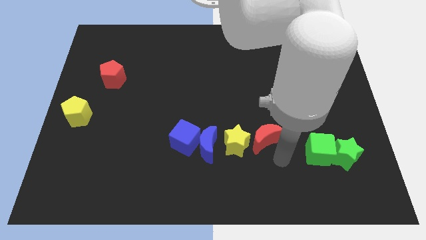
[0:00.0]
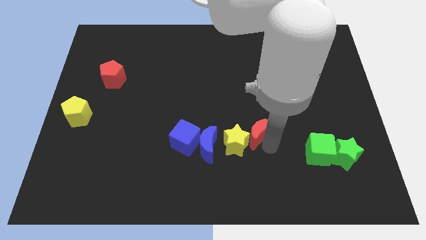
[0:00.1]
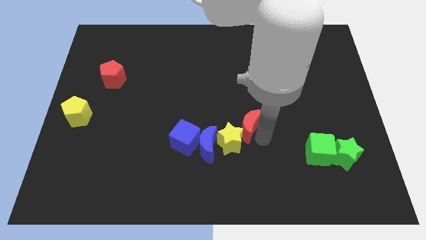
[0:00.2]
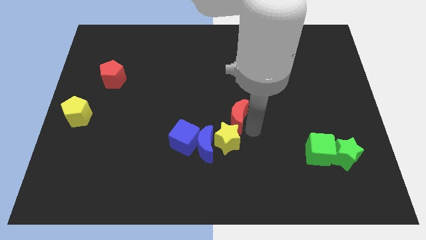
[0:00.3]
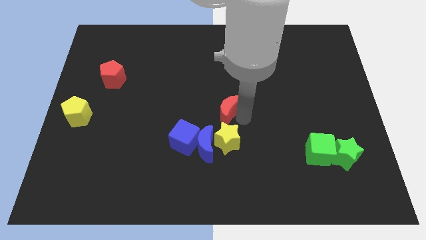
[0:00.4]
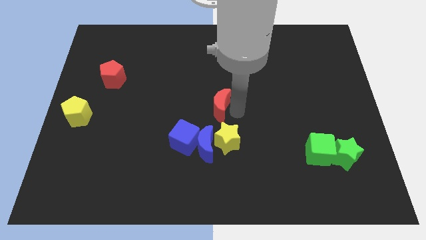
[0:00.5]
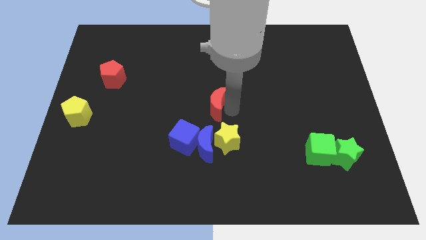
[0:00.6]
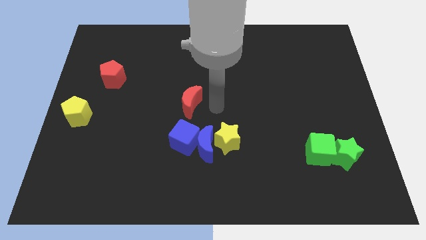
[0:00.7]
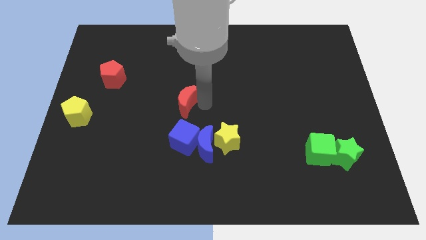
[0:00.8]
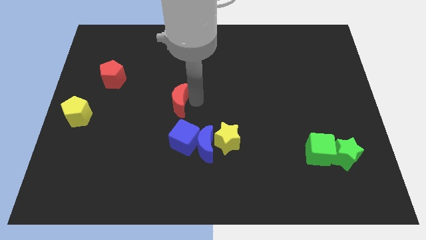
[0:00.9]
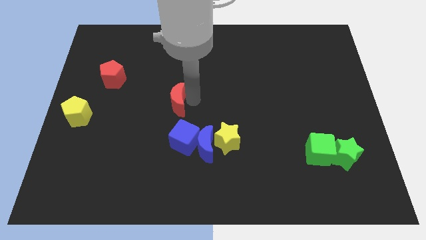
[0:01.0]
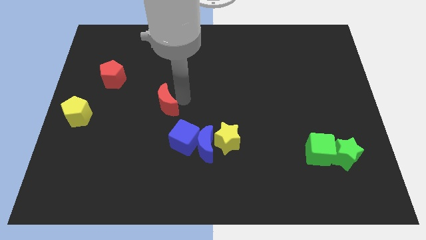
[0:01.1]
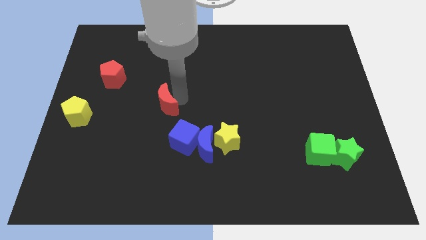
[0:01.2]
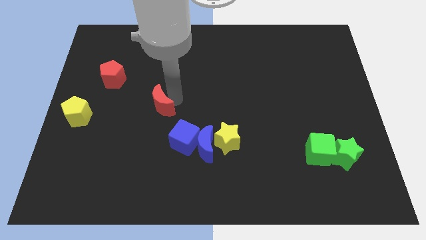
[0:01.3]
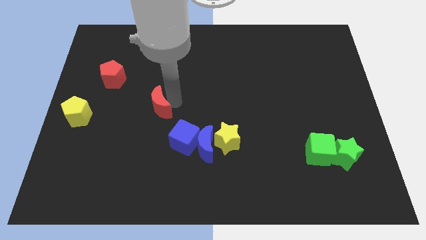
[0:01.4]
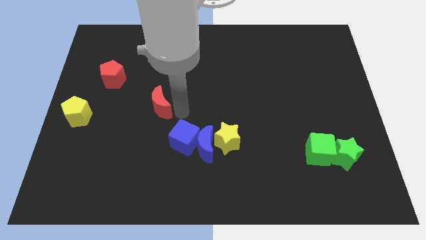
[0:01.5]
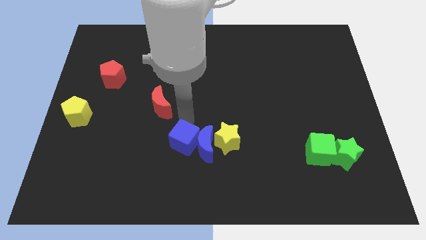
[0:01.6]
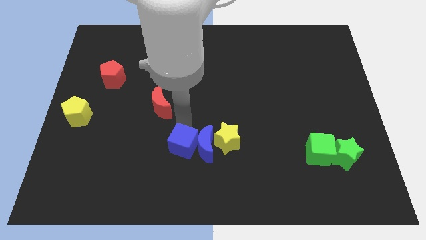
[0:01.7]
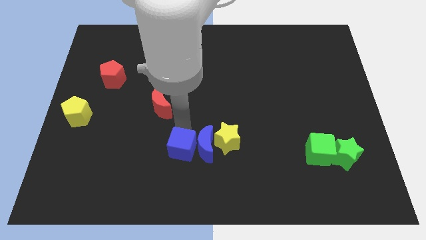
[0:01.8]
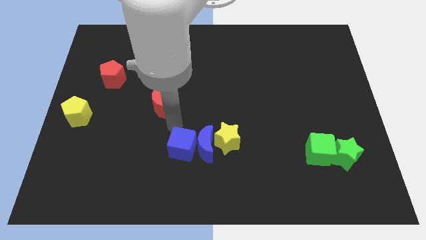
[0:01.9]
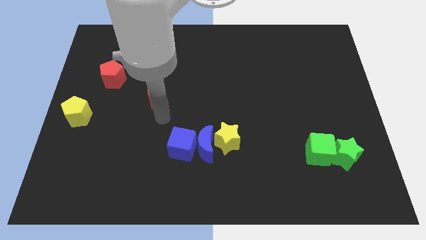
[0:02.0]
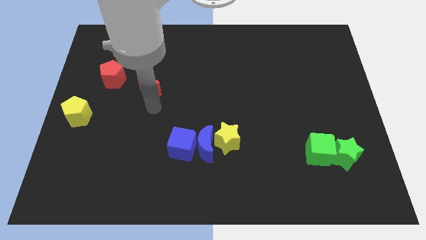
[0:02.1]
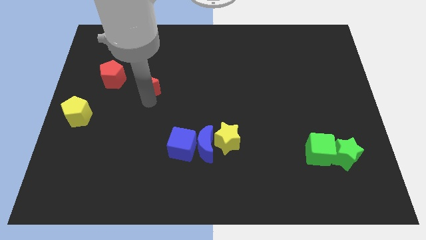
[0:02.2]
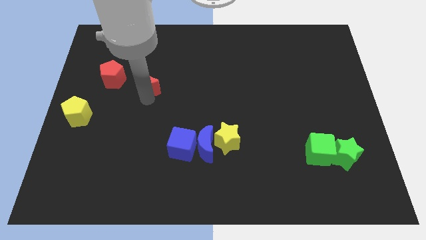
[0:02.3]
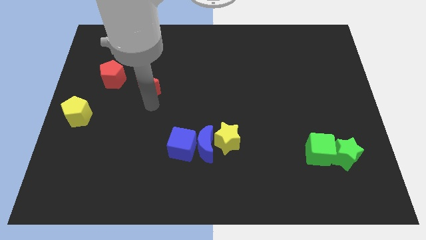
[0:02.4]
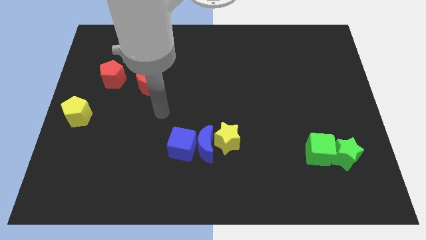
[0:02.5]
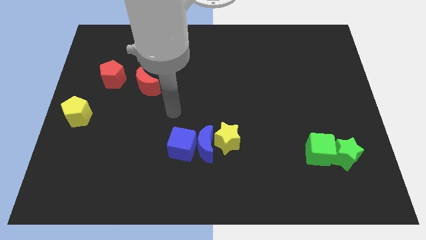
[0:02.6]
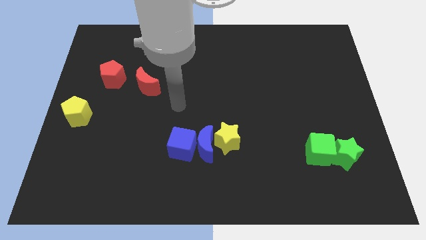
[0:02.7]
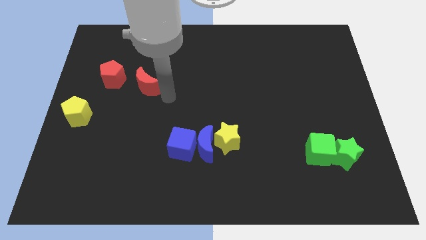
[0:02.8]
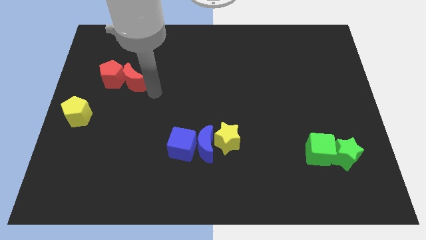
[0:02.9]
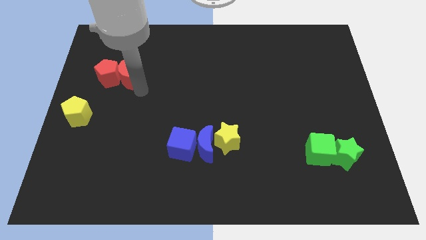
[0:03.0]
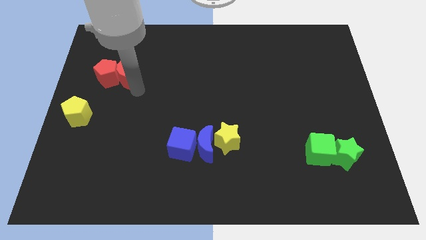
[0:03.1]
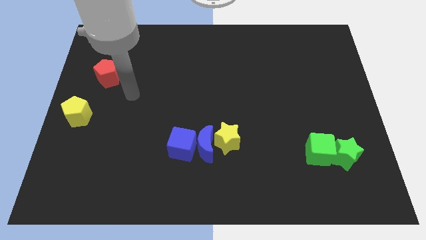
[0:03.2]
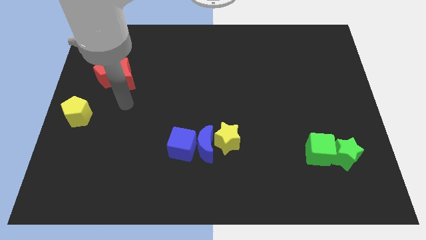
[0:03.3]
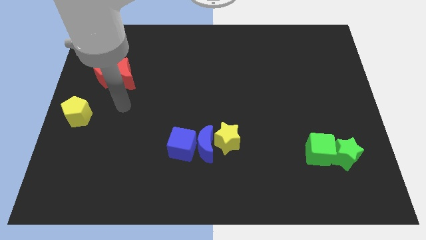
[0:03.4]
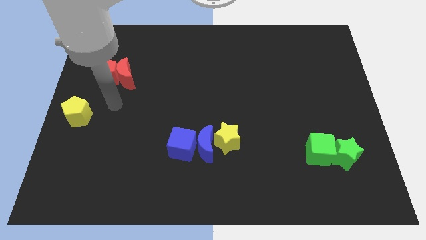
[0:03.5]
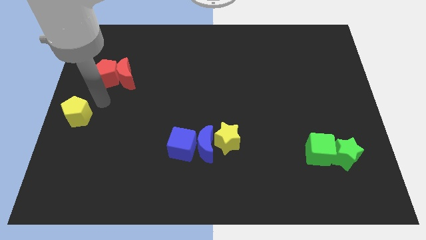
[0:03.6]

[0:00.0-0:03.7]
drag the red moon close to red pentagon

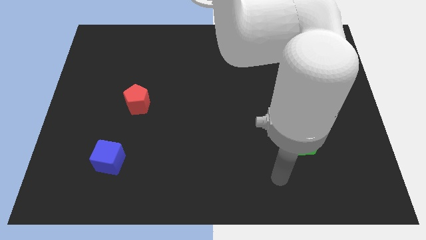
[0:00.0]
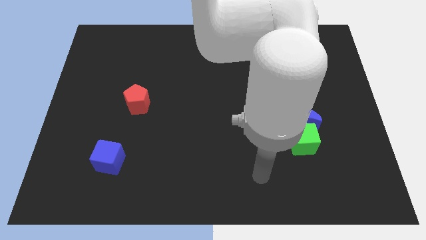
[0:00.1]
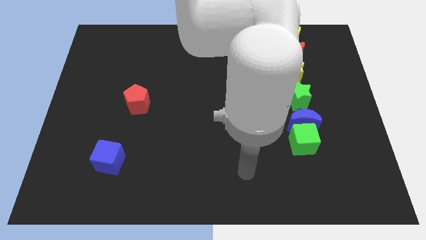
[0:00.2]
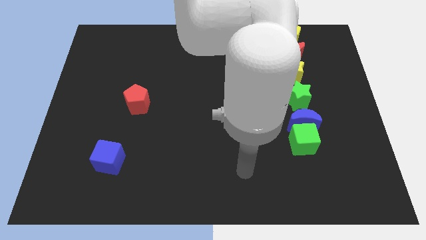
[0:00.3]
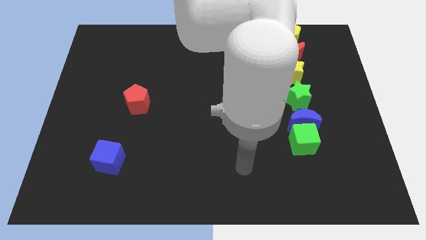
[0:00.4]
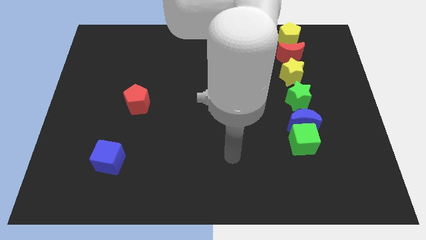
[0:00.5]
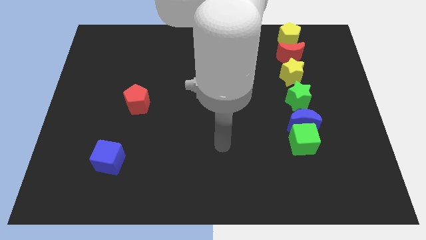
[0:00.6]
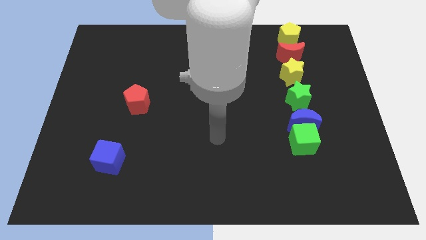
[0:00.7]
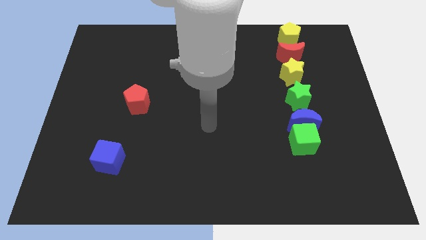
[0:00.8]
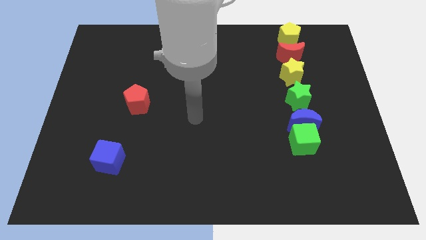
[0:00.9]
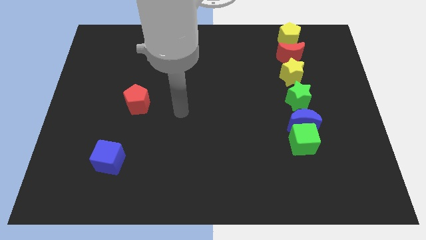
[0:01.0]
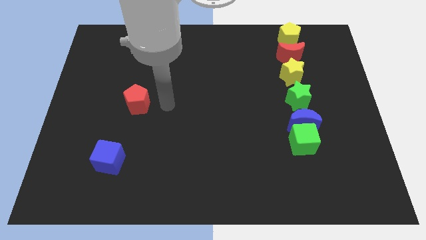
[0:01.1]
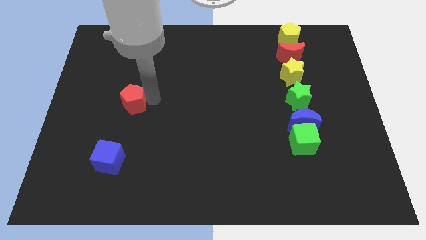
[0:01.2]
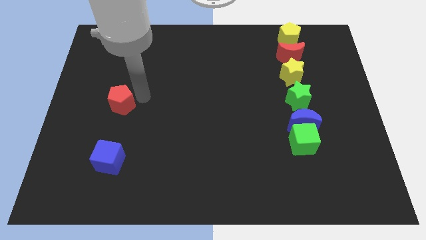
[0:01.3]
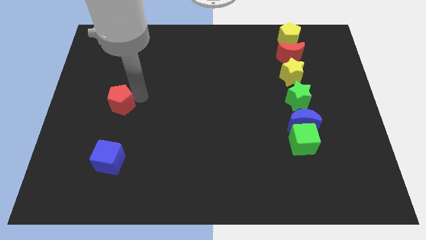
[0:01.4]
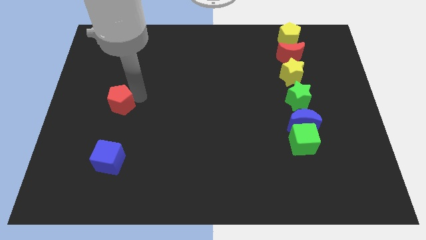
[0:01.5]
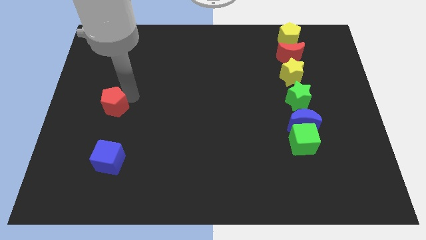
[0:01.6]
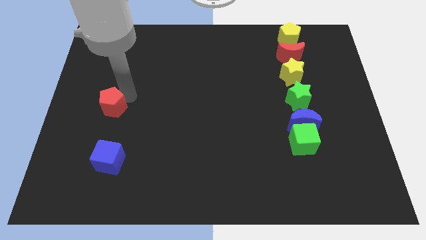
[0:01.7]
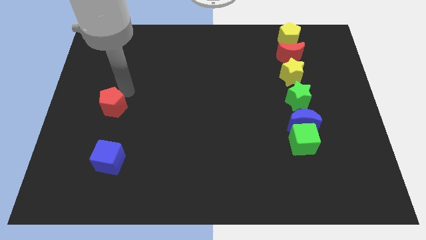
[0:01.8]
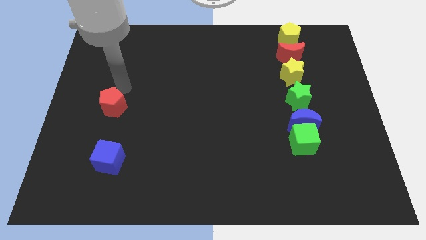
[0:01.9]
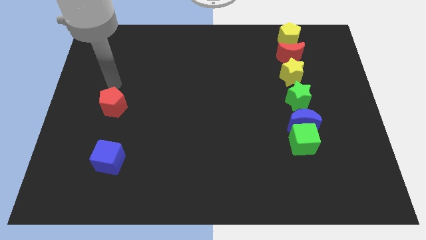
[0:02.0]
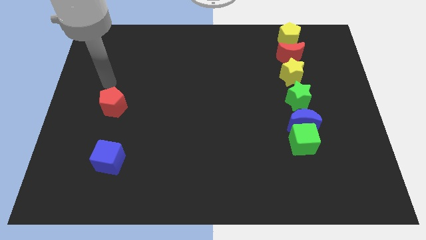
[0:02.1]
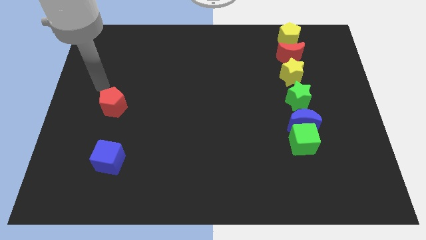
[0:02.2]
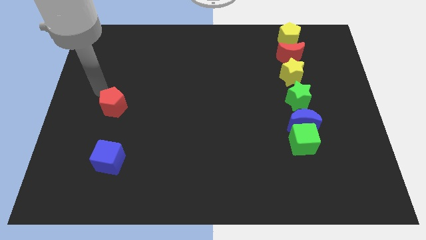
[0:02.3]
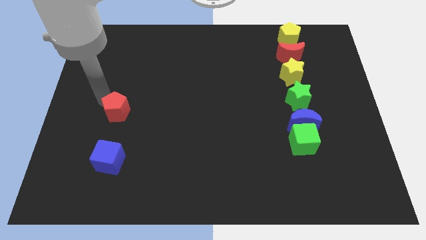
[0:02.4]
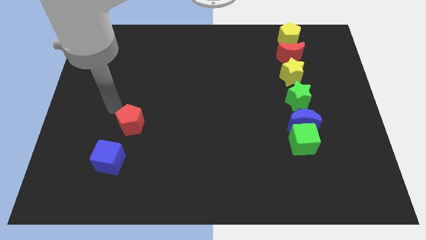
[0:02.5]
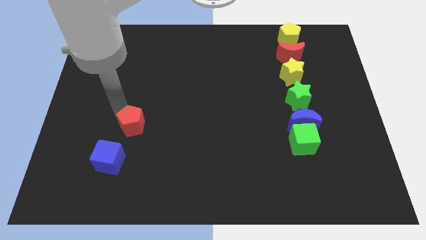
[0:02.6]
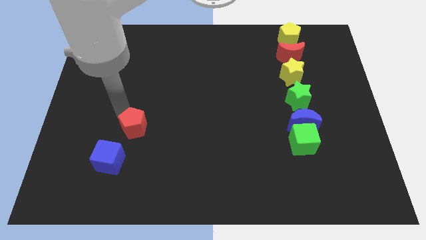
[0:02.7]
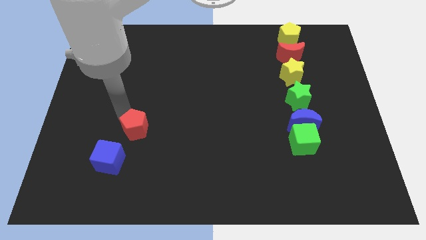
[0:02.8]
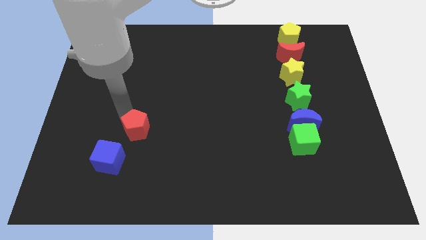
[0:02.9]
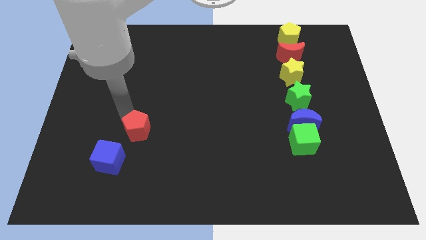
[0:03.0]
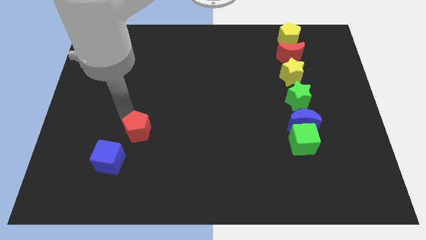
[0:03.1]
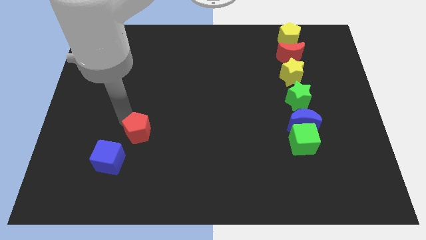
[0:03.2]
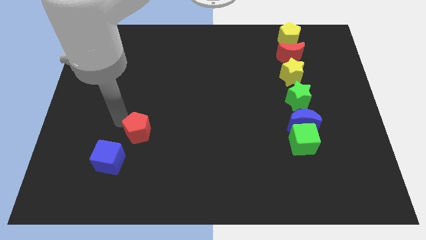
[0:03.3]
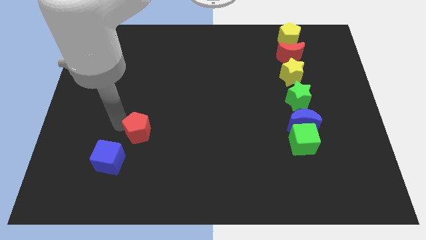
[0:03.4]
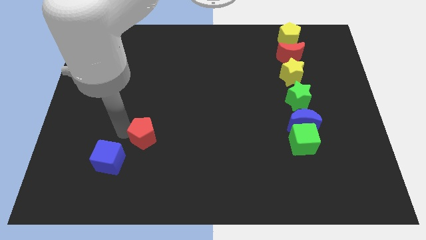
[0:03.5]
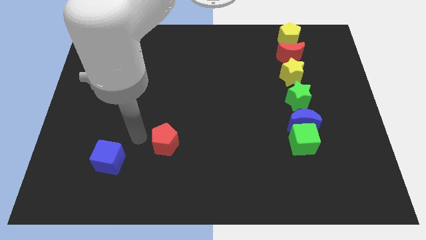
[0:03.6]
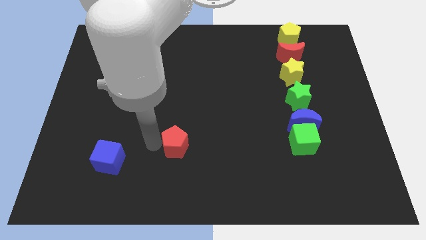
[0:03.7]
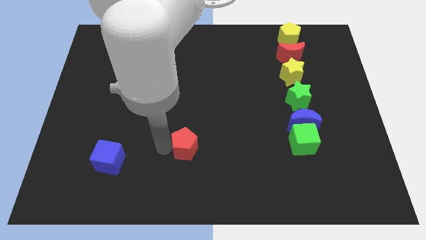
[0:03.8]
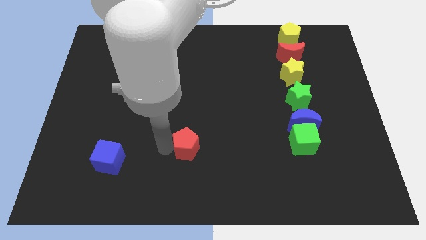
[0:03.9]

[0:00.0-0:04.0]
move the red pentagon to the right of the board

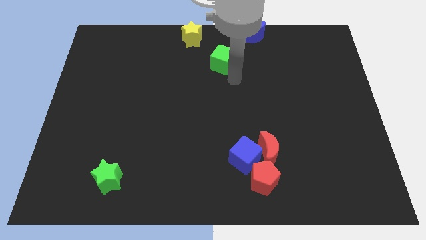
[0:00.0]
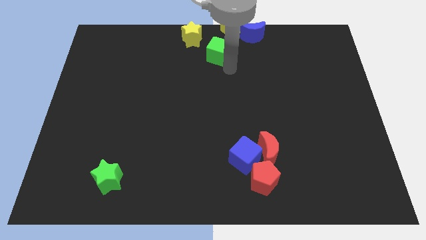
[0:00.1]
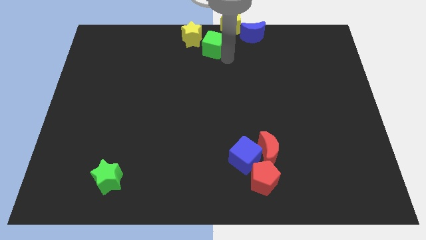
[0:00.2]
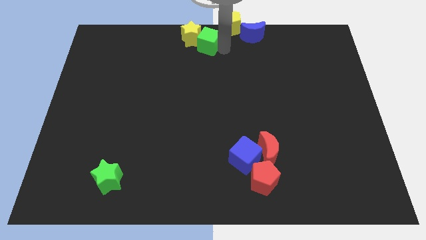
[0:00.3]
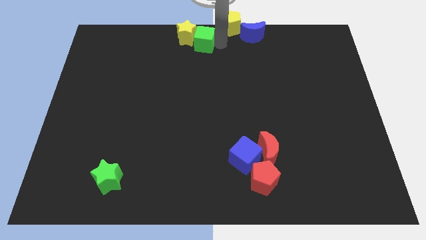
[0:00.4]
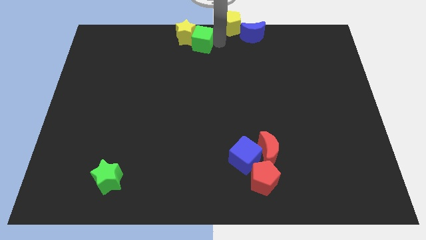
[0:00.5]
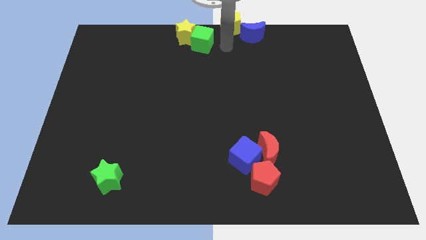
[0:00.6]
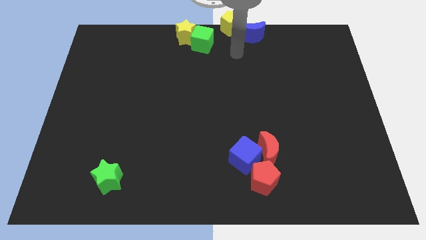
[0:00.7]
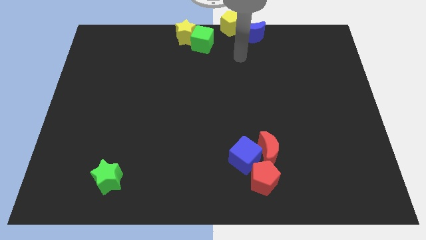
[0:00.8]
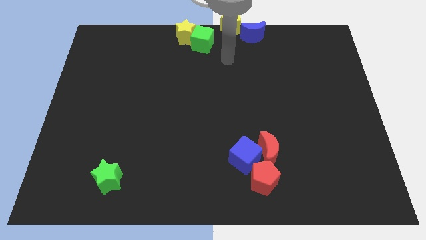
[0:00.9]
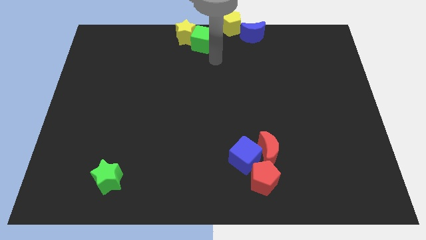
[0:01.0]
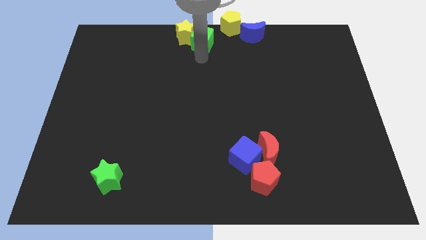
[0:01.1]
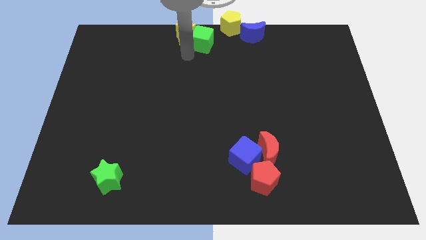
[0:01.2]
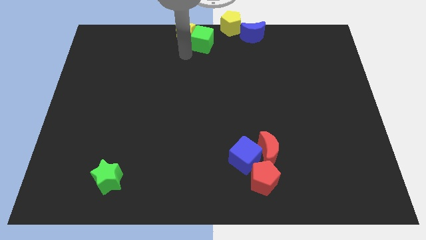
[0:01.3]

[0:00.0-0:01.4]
push the green cube into the yellow star
